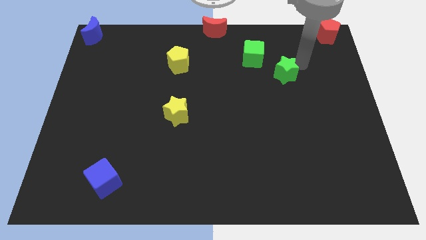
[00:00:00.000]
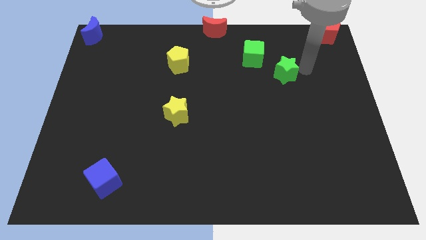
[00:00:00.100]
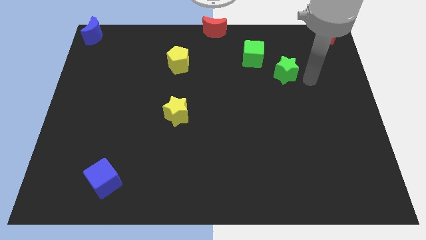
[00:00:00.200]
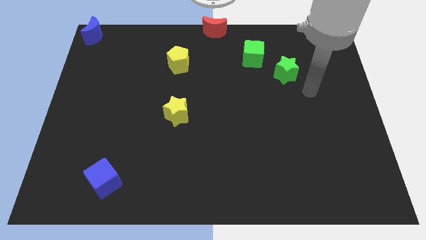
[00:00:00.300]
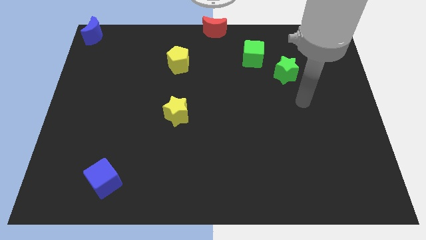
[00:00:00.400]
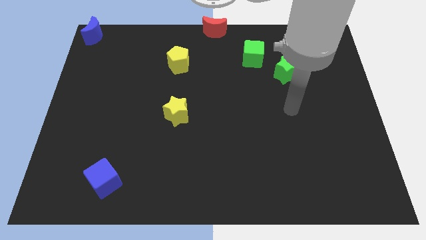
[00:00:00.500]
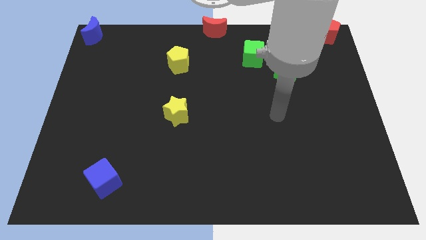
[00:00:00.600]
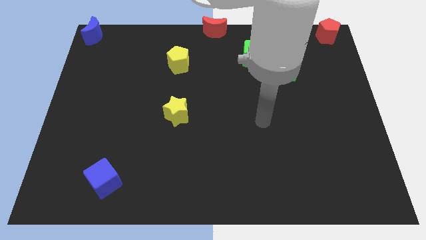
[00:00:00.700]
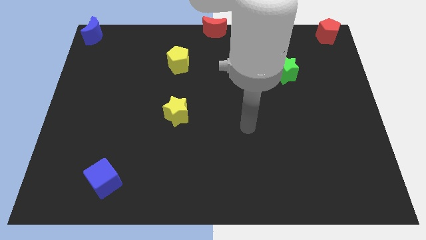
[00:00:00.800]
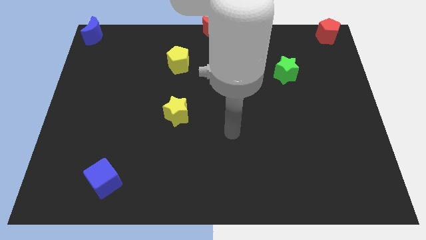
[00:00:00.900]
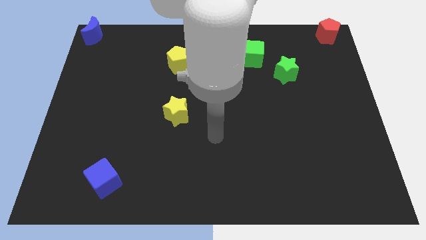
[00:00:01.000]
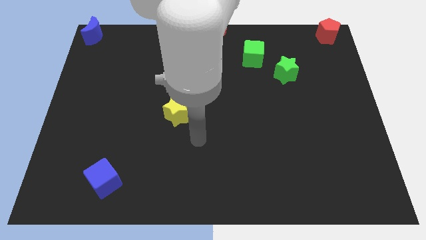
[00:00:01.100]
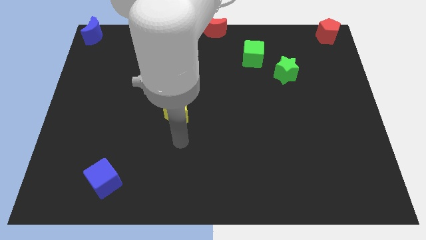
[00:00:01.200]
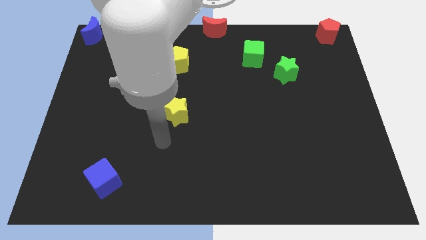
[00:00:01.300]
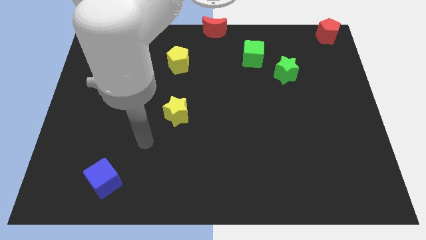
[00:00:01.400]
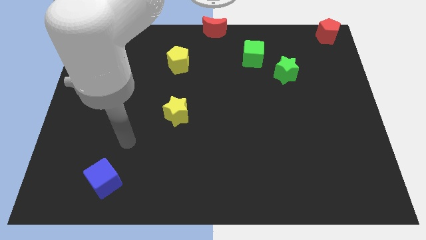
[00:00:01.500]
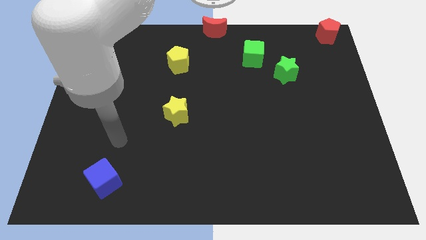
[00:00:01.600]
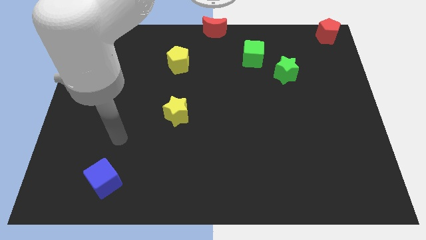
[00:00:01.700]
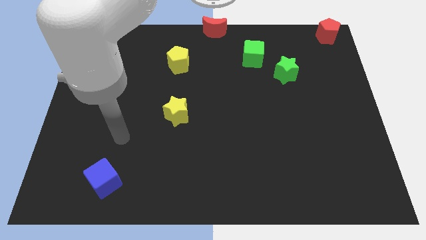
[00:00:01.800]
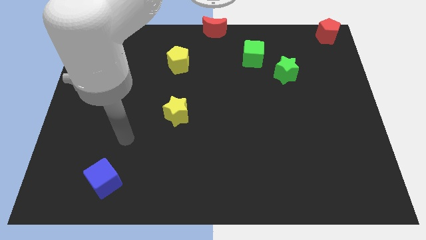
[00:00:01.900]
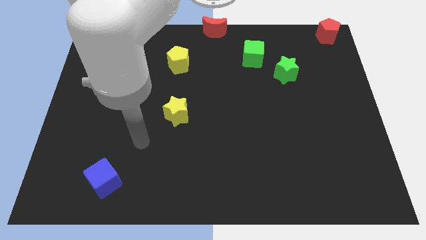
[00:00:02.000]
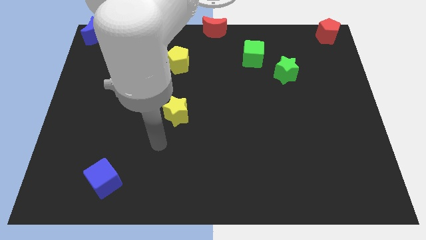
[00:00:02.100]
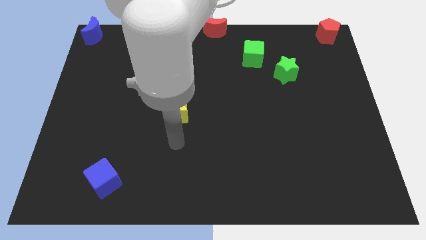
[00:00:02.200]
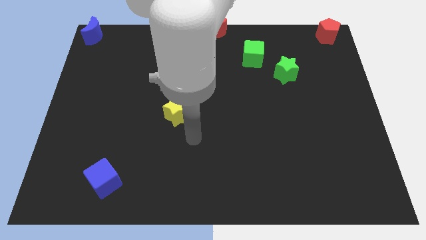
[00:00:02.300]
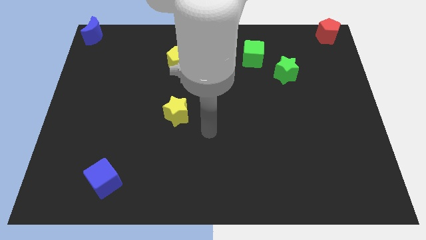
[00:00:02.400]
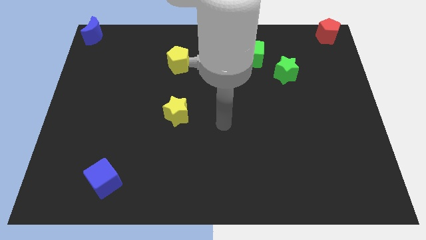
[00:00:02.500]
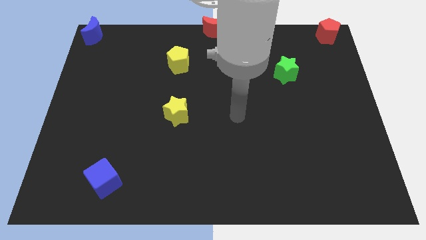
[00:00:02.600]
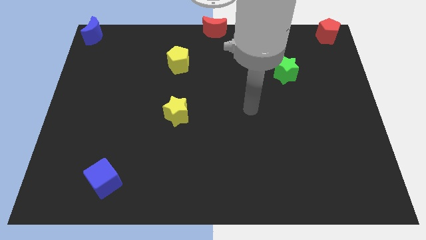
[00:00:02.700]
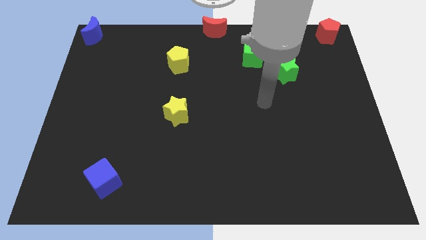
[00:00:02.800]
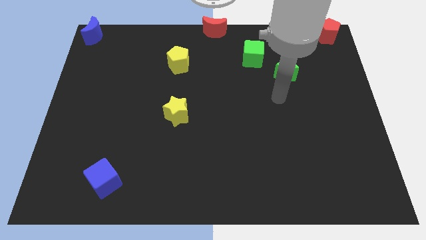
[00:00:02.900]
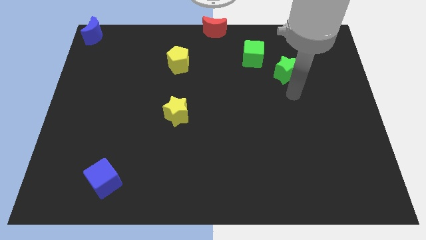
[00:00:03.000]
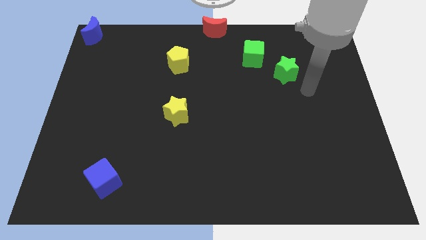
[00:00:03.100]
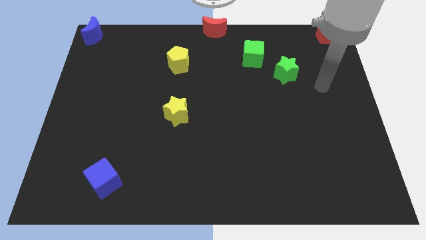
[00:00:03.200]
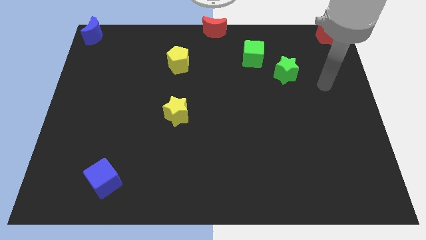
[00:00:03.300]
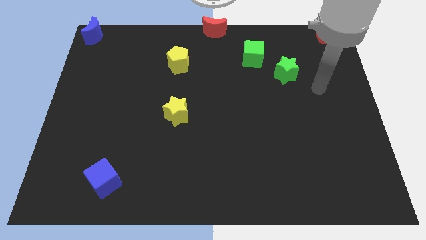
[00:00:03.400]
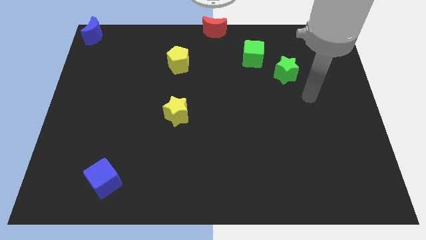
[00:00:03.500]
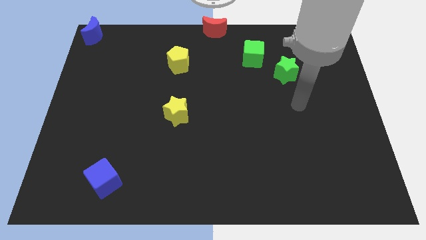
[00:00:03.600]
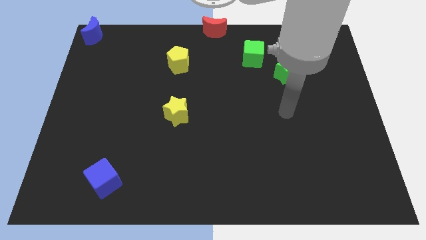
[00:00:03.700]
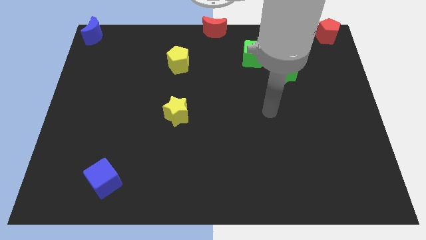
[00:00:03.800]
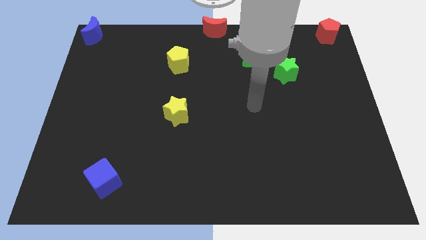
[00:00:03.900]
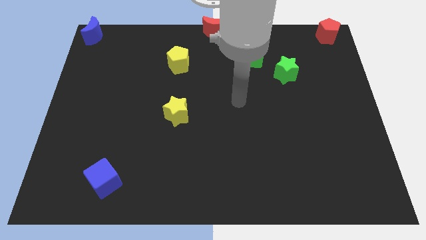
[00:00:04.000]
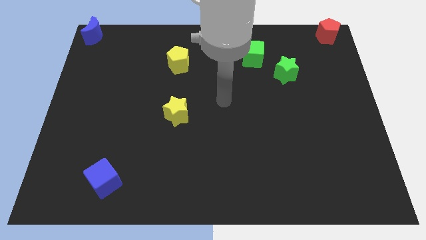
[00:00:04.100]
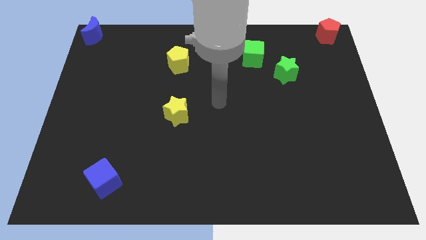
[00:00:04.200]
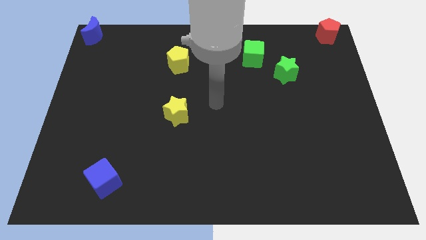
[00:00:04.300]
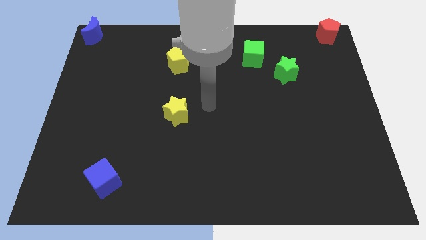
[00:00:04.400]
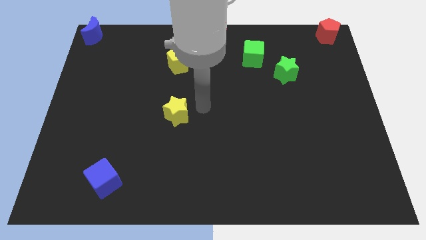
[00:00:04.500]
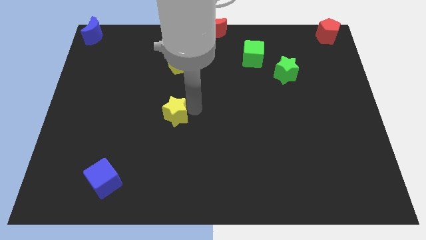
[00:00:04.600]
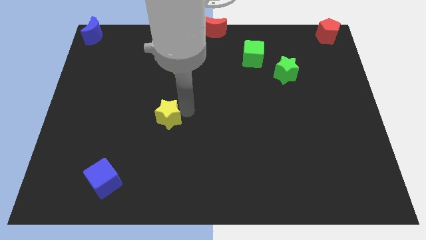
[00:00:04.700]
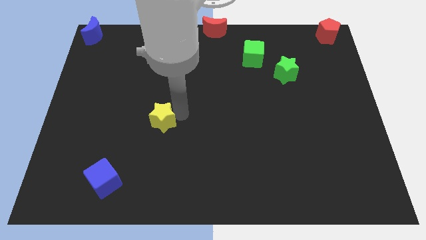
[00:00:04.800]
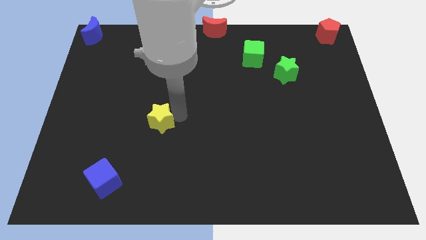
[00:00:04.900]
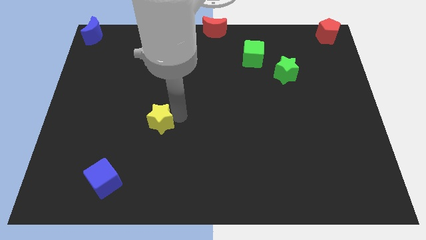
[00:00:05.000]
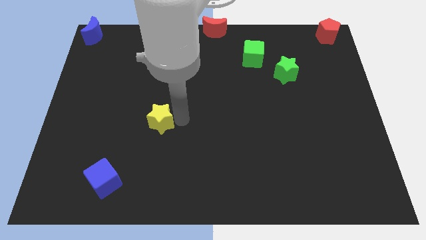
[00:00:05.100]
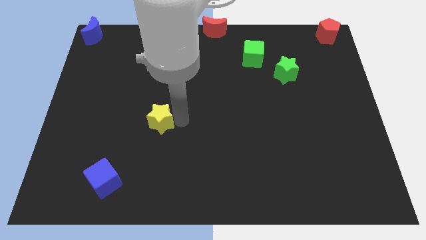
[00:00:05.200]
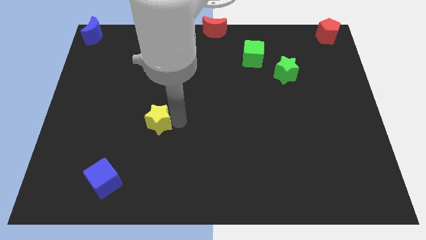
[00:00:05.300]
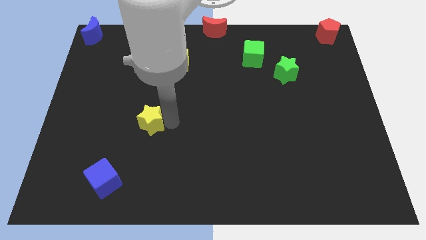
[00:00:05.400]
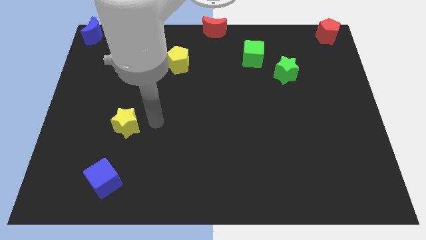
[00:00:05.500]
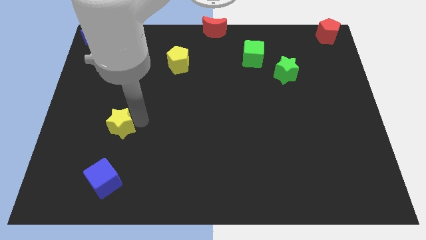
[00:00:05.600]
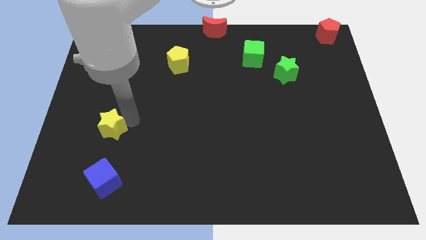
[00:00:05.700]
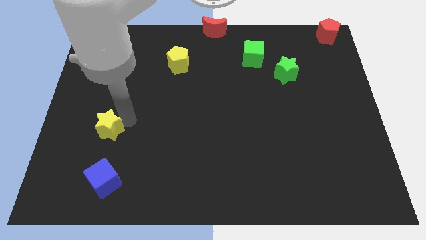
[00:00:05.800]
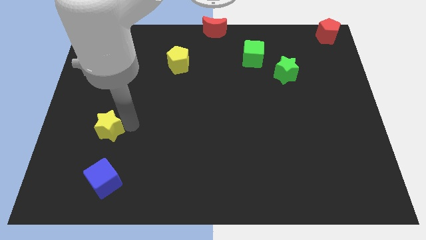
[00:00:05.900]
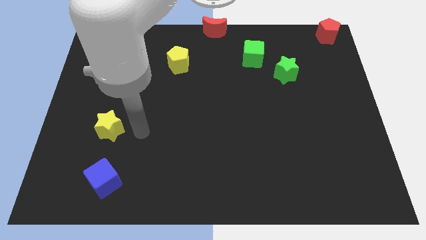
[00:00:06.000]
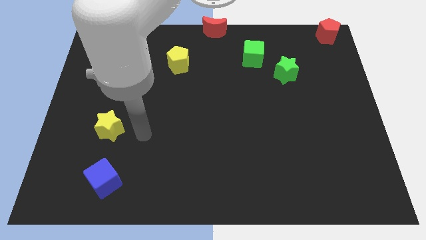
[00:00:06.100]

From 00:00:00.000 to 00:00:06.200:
place the yellow star above the blue cube

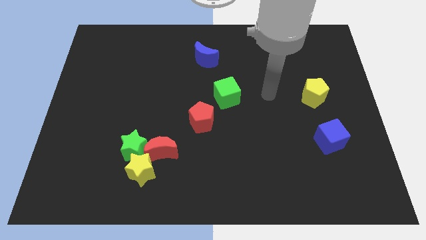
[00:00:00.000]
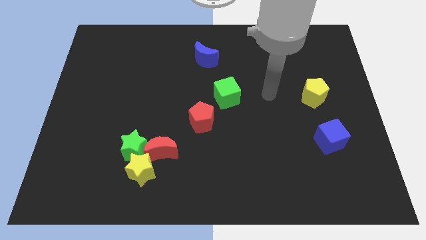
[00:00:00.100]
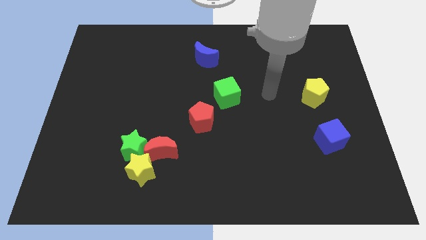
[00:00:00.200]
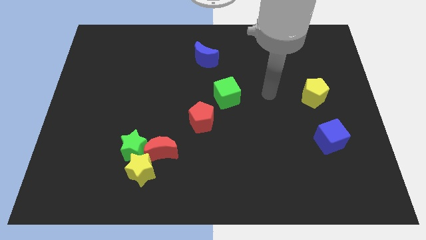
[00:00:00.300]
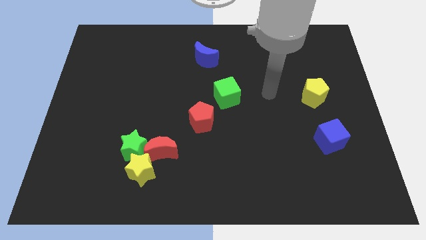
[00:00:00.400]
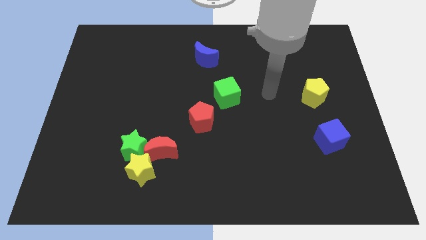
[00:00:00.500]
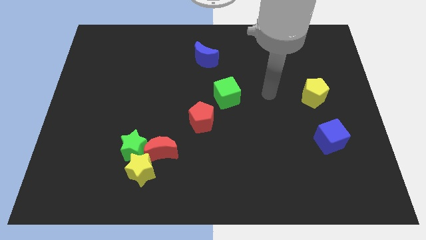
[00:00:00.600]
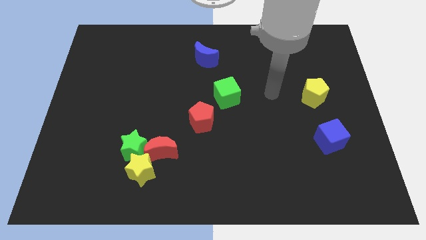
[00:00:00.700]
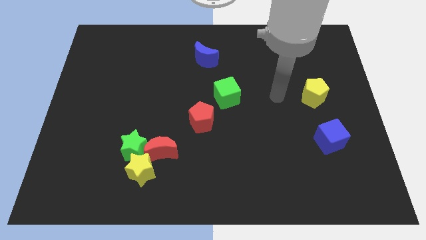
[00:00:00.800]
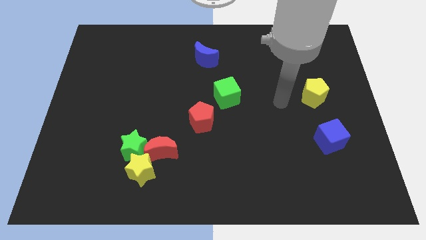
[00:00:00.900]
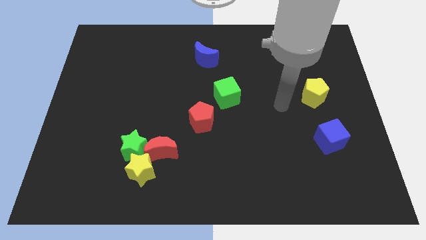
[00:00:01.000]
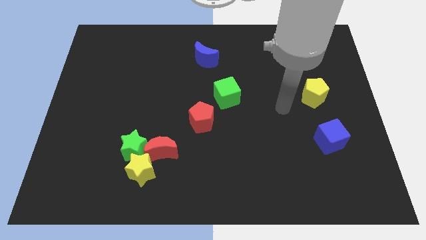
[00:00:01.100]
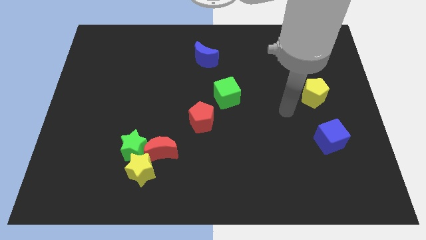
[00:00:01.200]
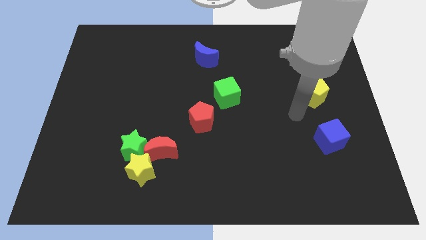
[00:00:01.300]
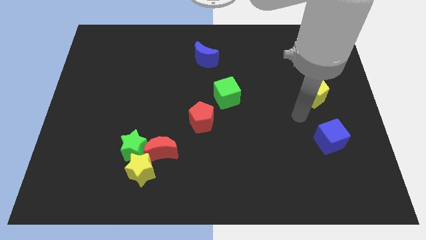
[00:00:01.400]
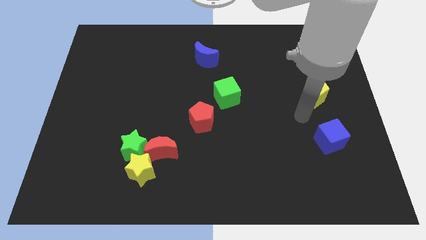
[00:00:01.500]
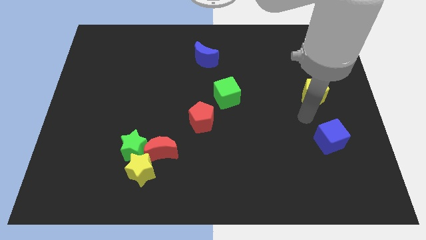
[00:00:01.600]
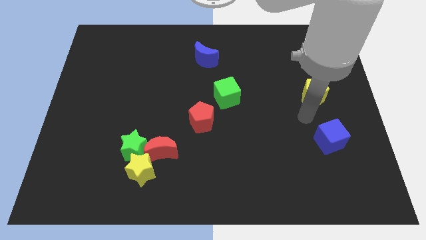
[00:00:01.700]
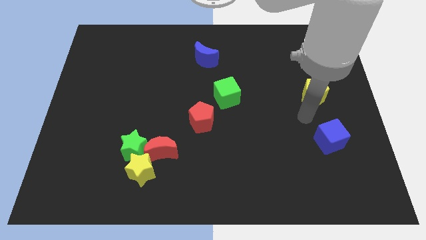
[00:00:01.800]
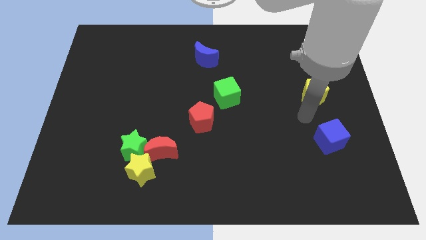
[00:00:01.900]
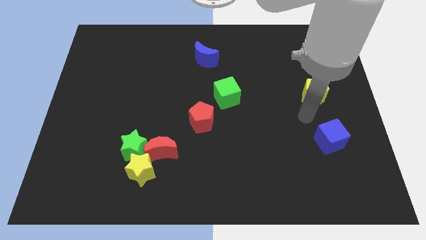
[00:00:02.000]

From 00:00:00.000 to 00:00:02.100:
point your arm below yellow pentagon

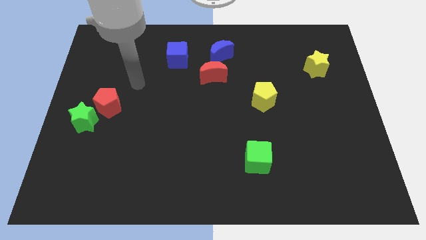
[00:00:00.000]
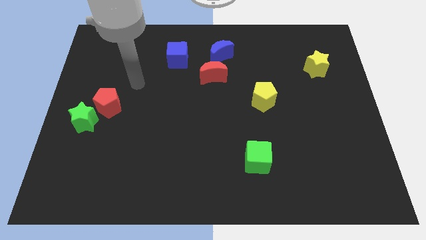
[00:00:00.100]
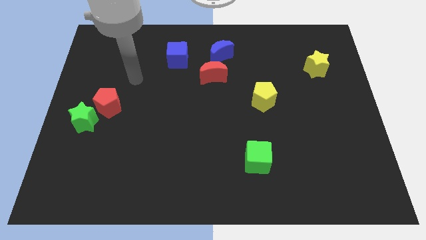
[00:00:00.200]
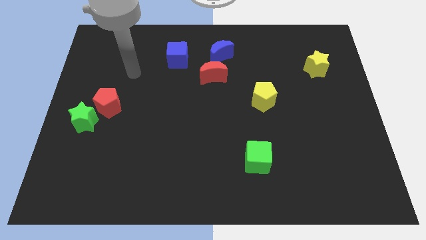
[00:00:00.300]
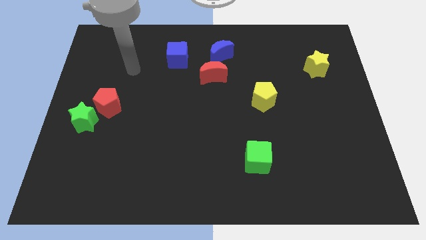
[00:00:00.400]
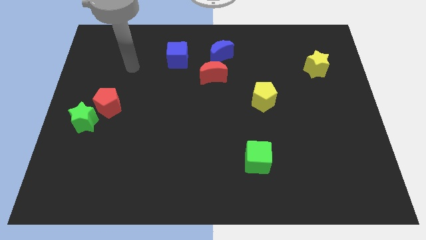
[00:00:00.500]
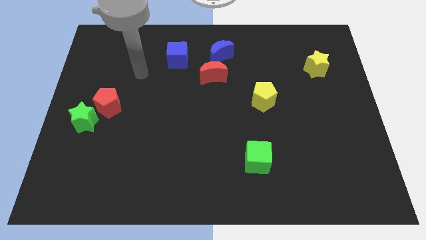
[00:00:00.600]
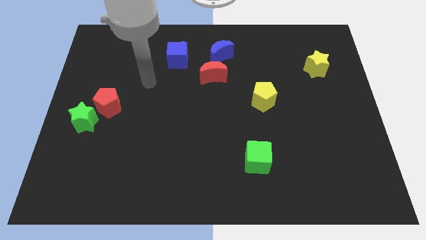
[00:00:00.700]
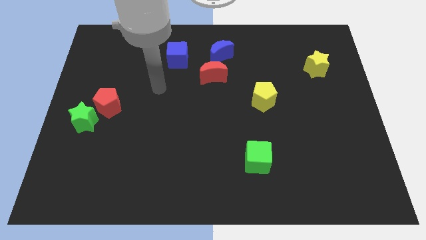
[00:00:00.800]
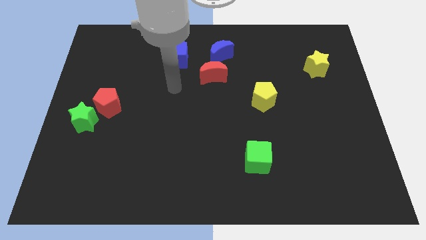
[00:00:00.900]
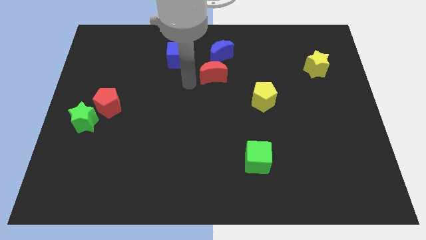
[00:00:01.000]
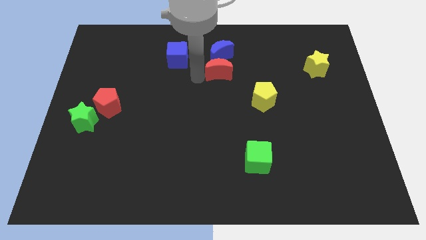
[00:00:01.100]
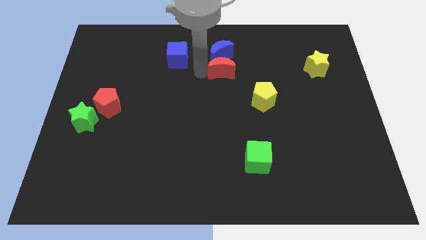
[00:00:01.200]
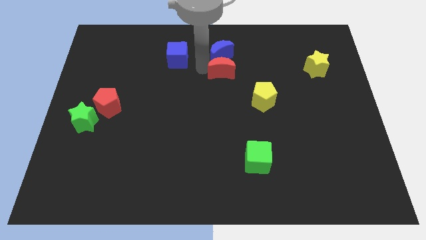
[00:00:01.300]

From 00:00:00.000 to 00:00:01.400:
push the red crescent slightly to the top
